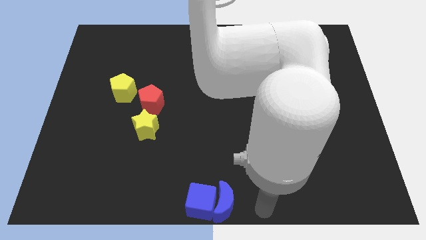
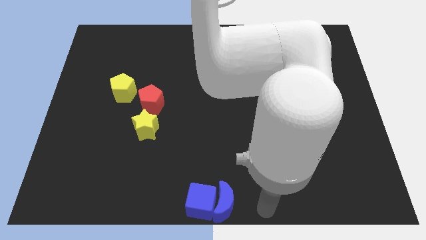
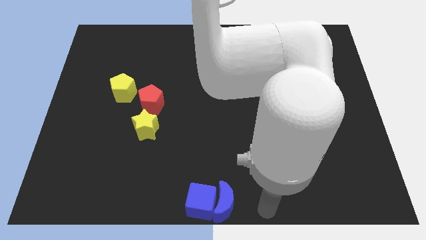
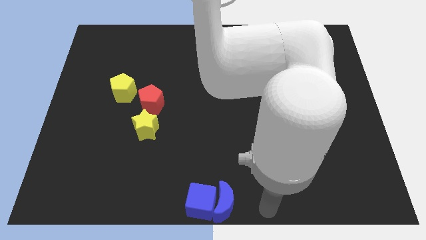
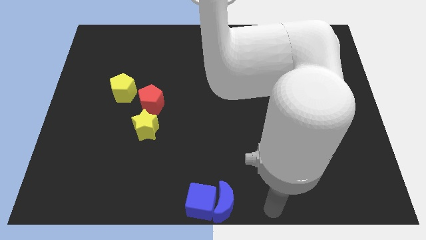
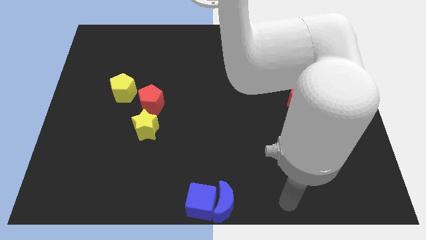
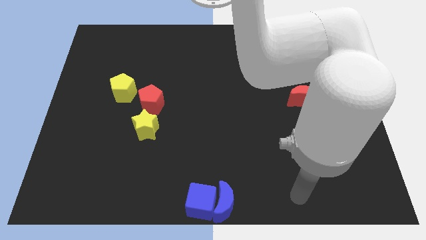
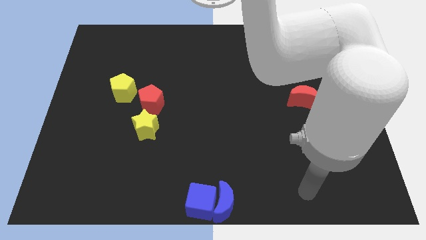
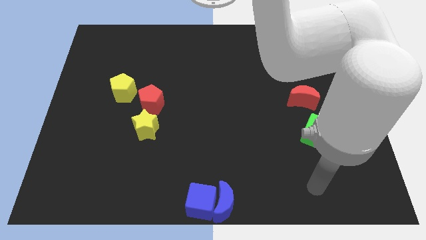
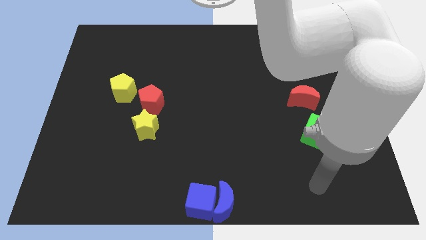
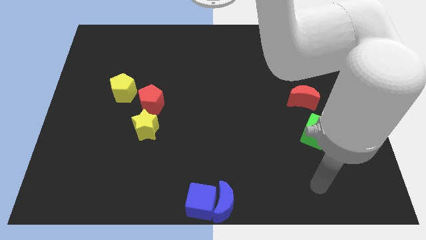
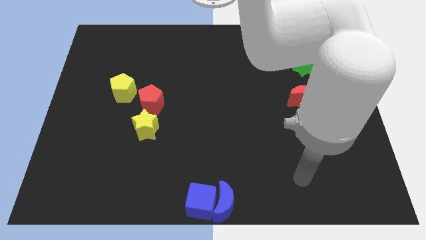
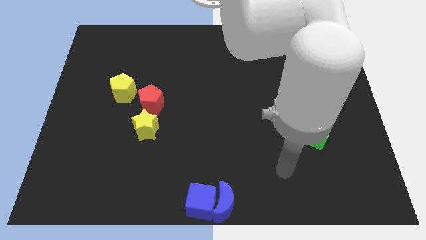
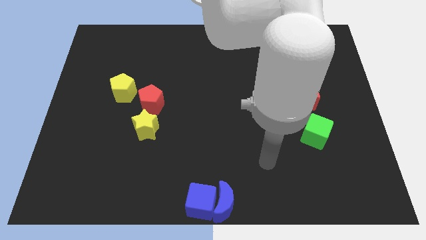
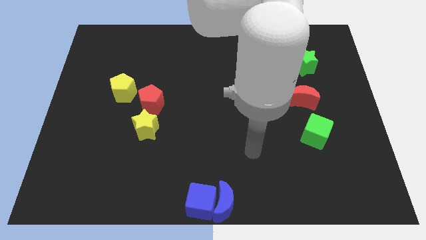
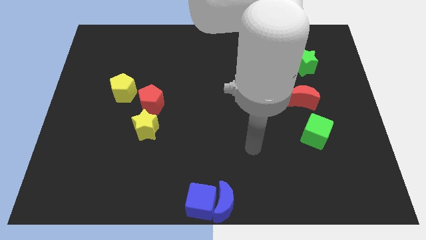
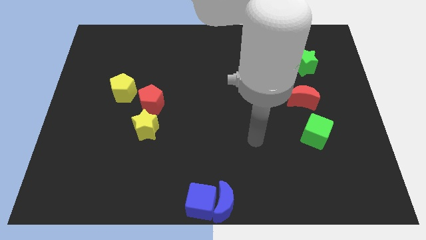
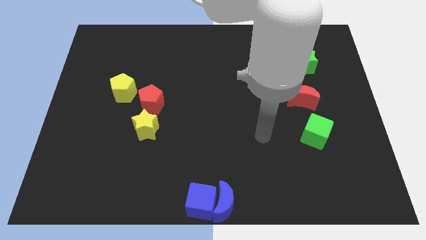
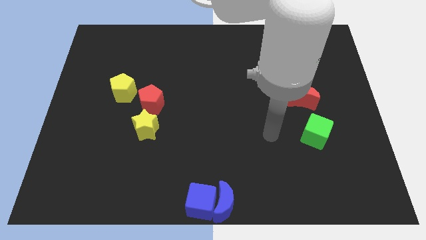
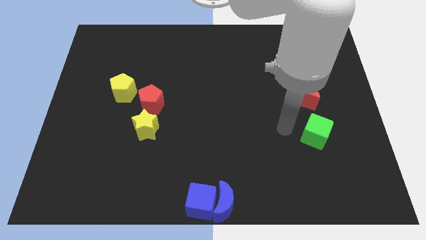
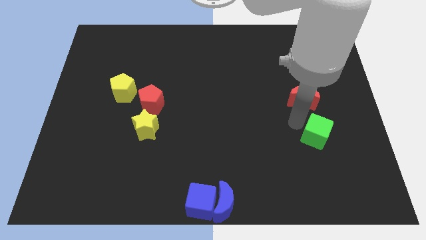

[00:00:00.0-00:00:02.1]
move the arm away from the blue blocks

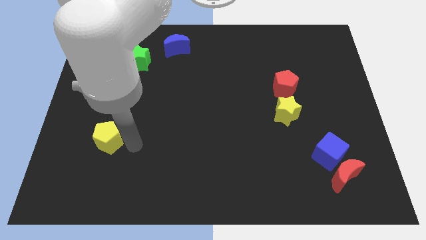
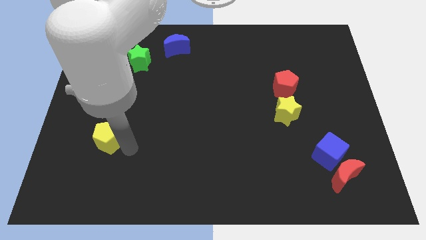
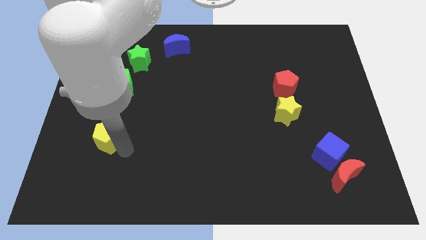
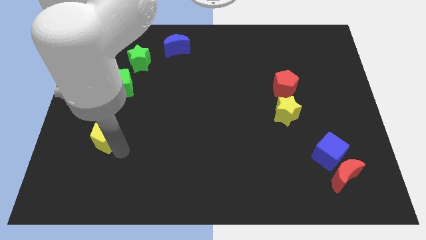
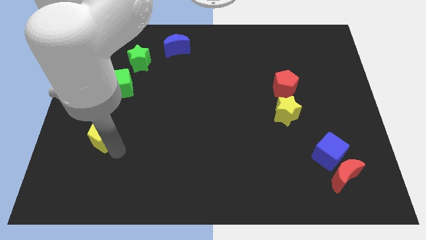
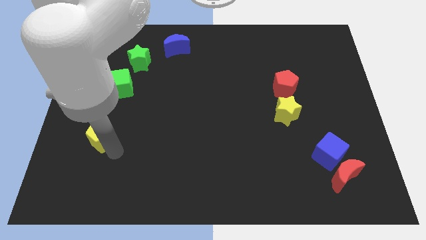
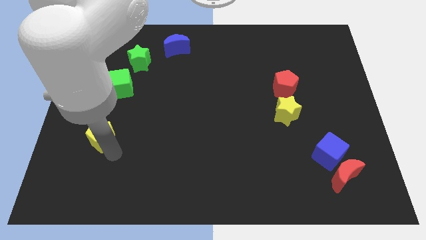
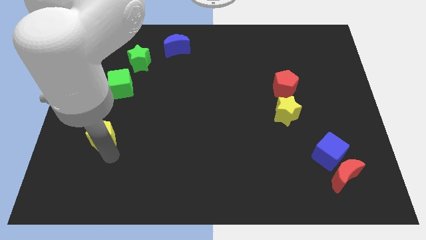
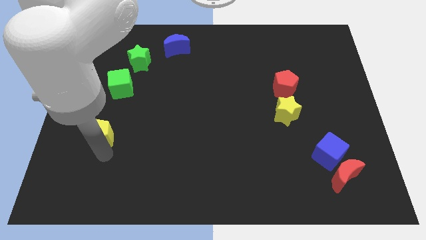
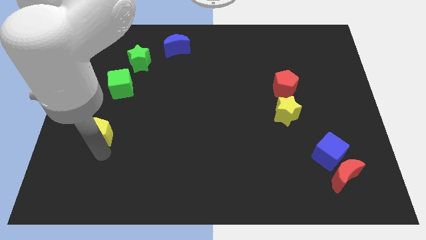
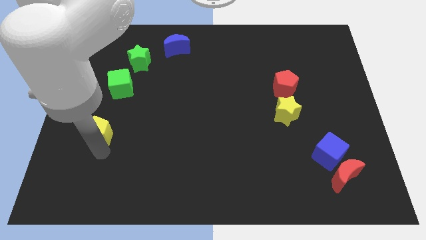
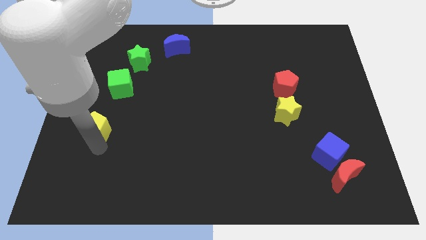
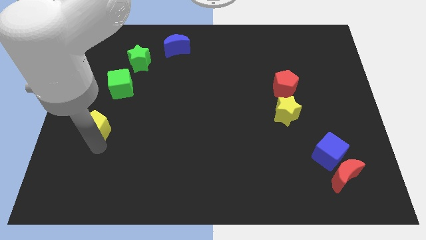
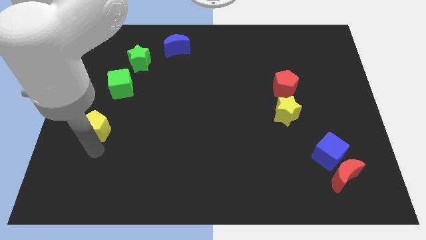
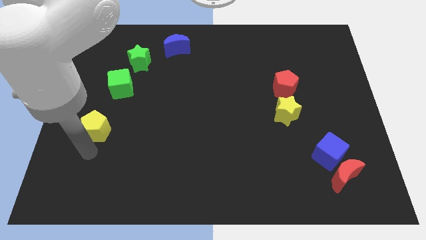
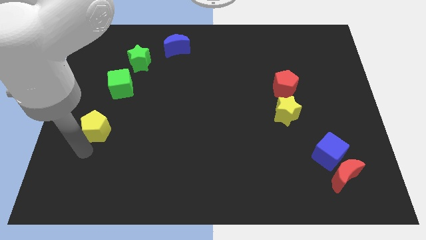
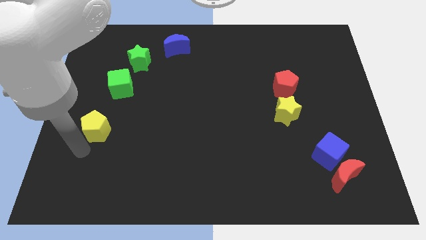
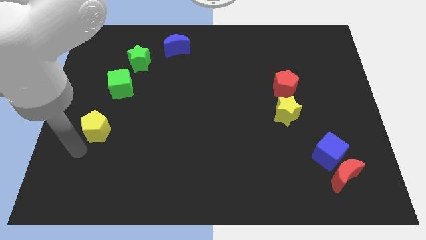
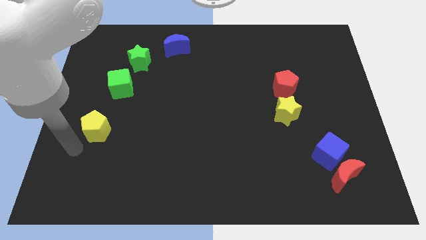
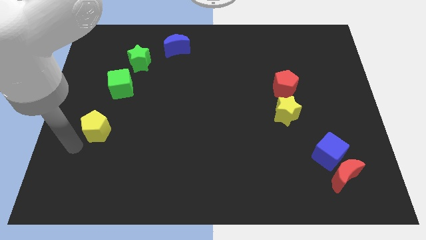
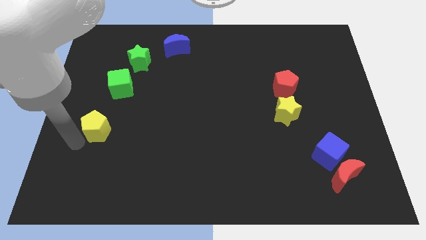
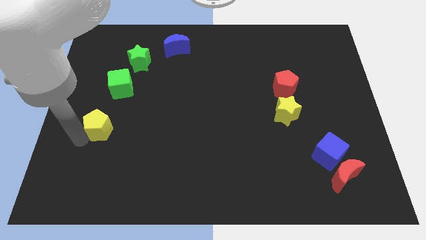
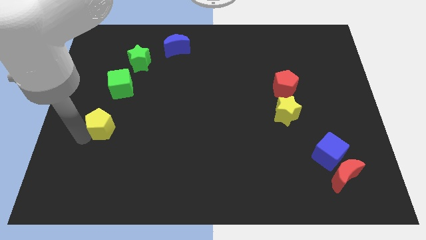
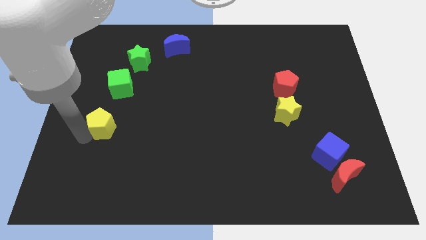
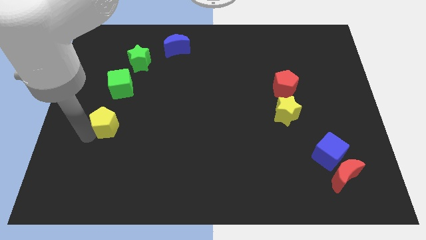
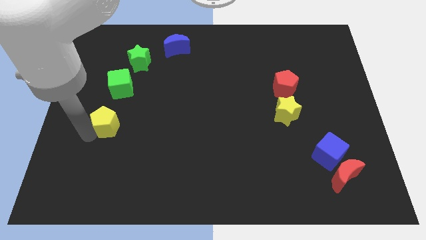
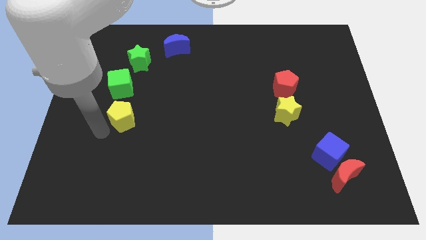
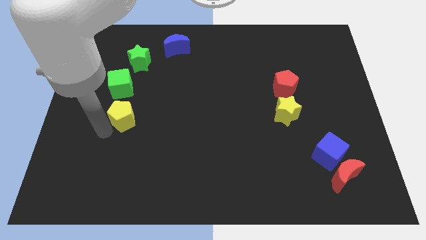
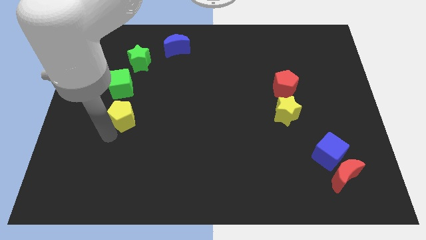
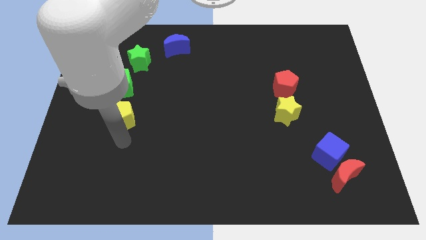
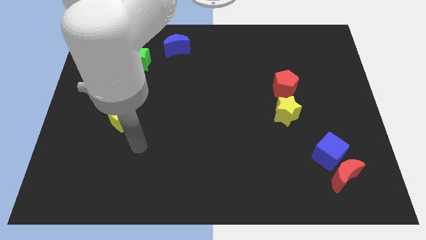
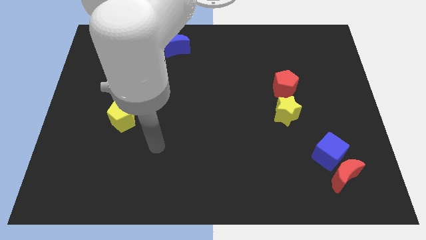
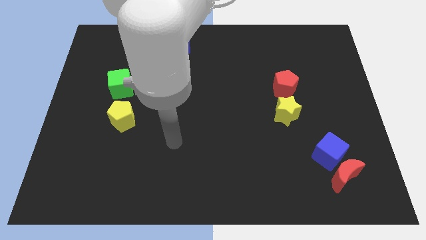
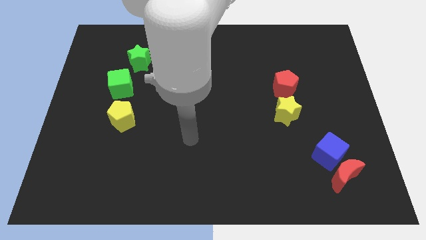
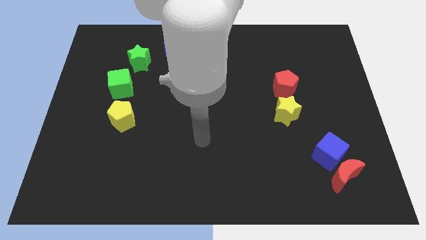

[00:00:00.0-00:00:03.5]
place yellow pentagon below green cube

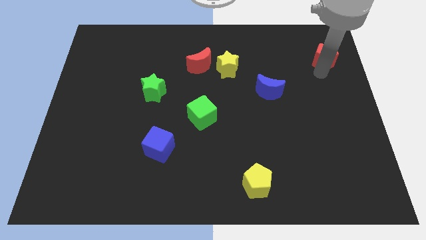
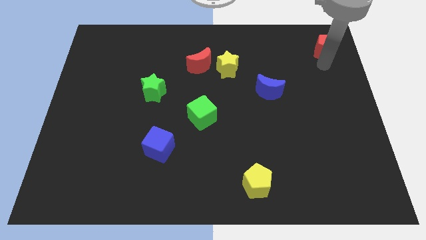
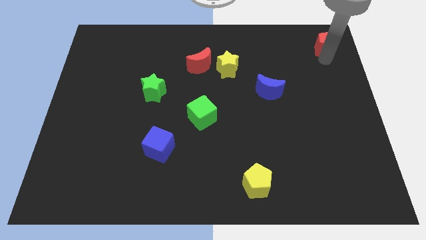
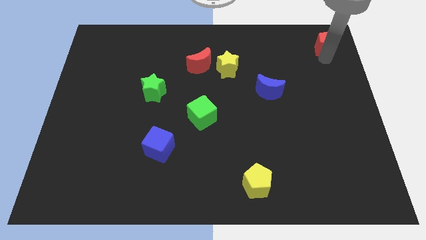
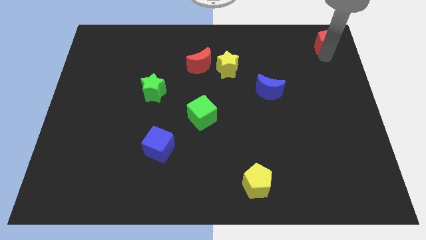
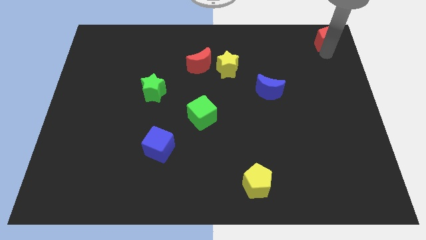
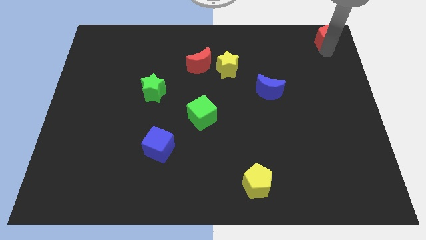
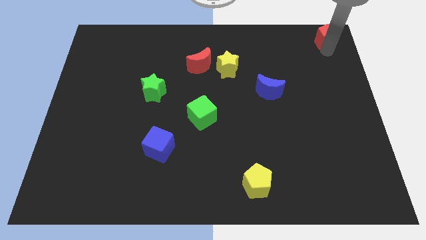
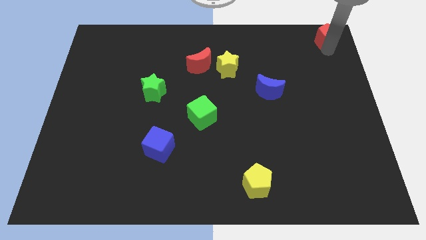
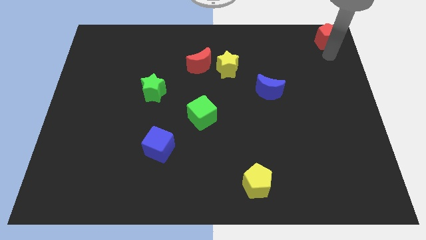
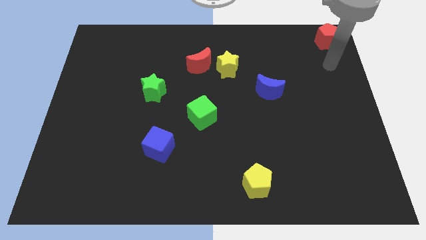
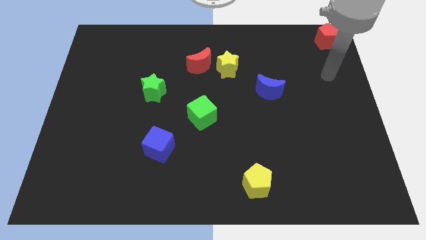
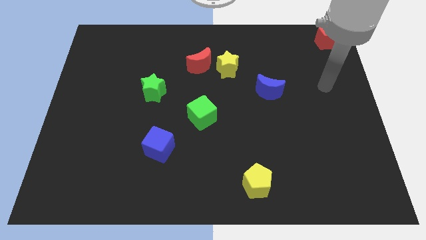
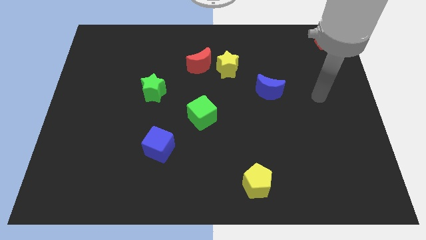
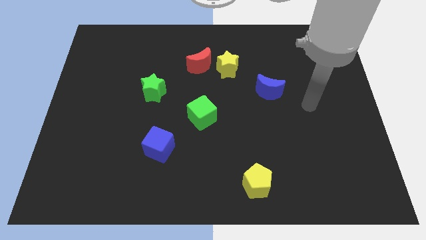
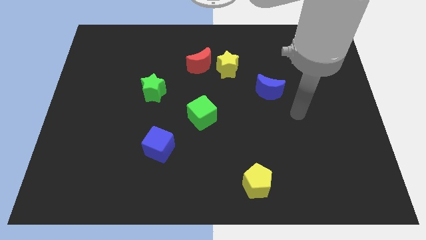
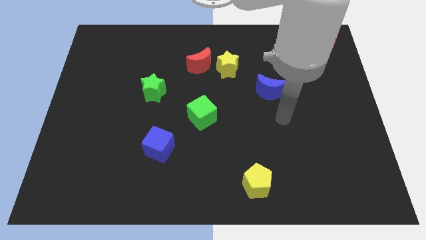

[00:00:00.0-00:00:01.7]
push the red pentagon to the top side

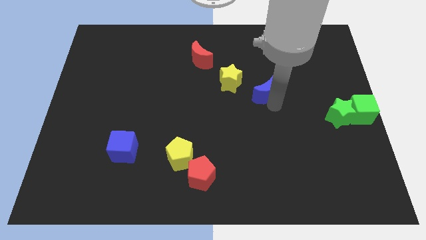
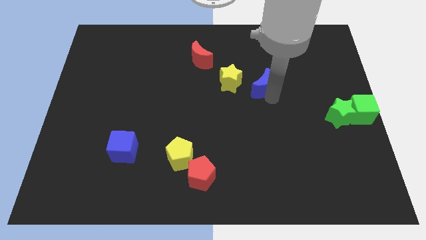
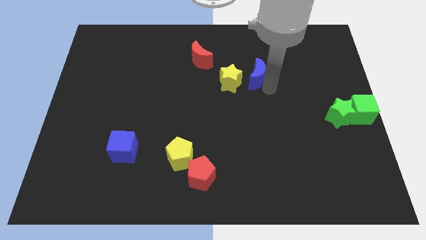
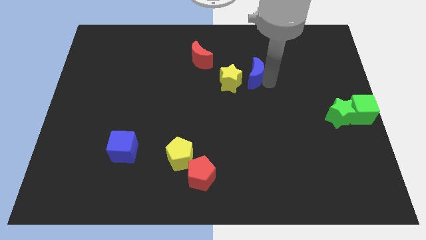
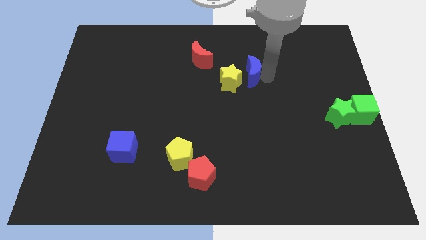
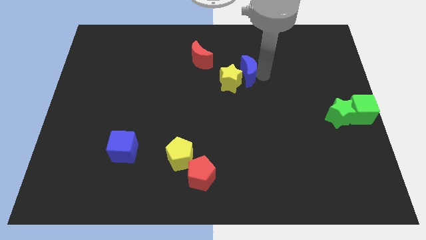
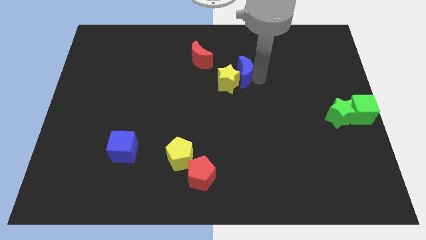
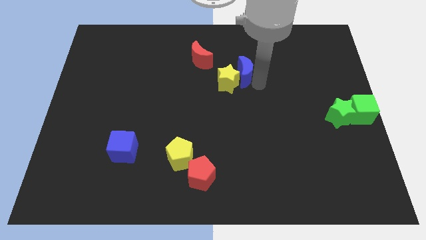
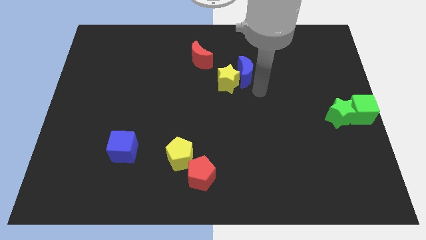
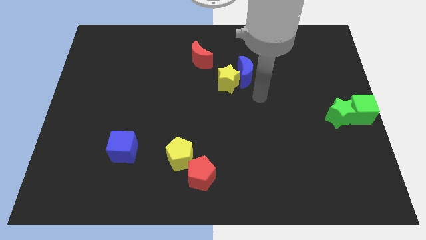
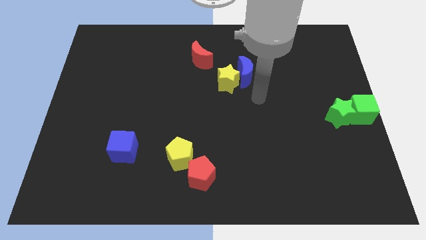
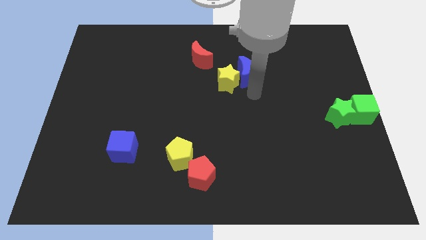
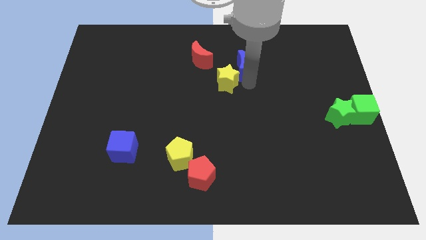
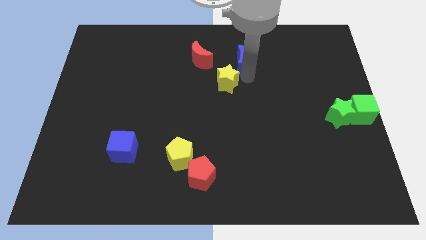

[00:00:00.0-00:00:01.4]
arrange the blue moon at the top right of the yellow star

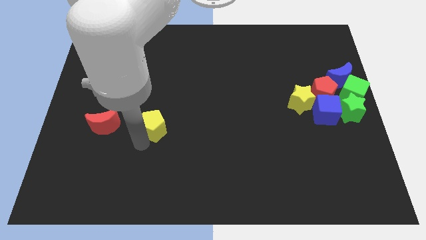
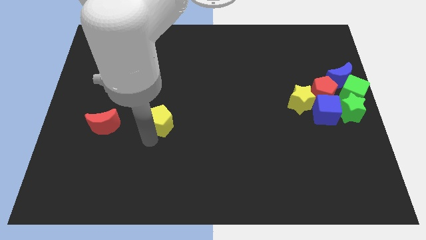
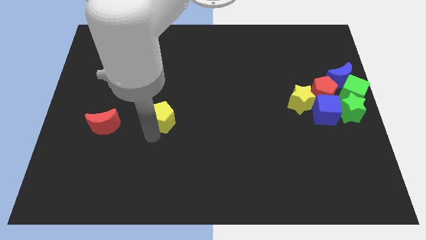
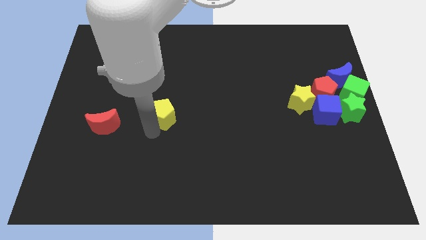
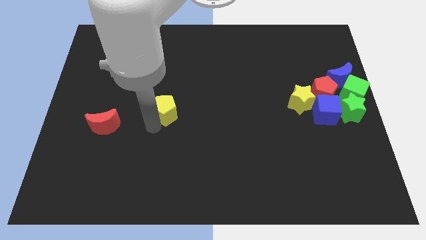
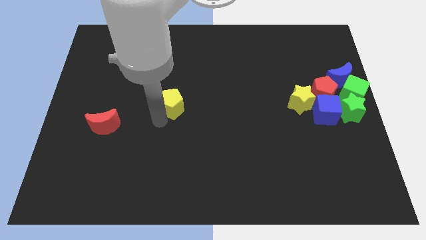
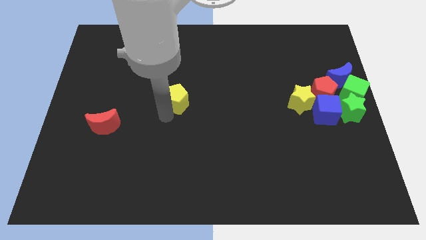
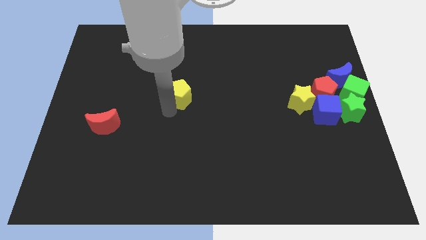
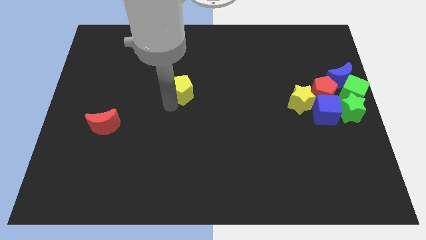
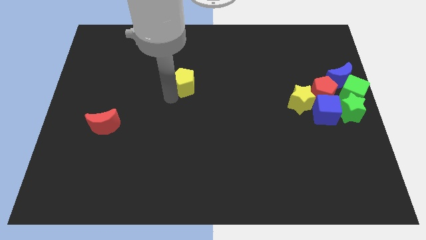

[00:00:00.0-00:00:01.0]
place the yellow pentagon to the center of the board
